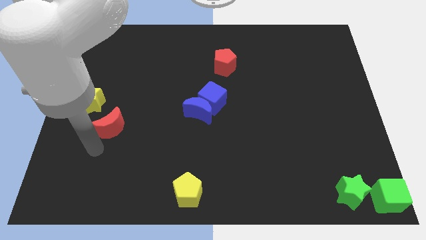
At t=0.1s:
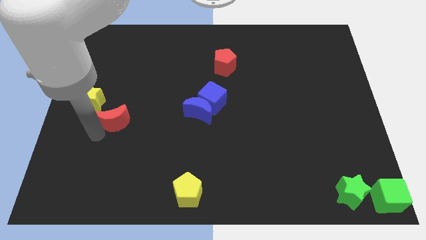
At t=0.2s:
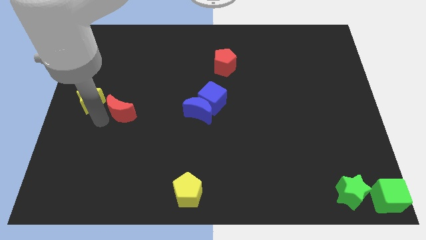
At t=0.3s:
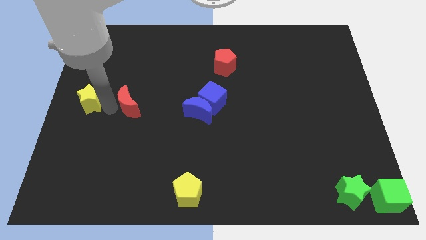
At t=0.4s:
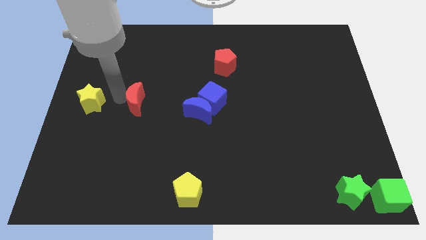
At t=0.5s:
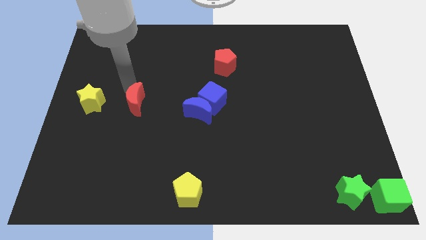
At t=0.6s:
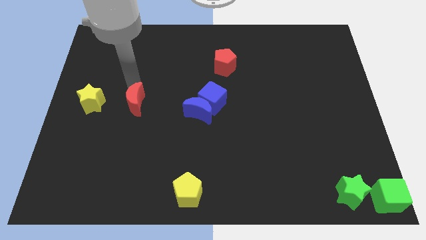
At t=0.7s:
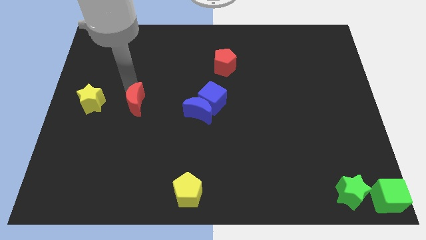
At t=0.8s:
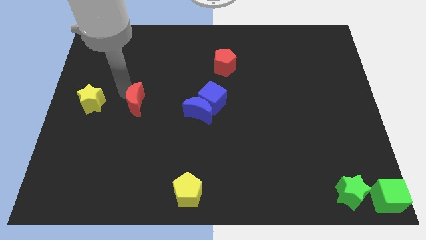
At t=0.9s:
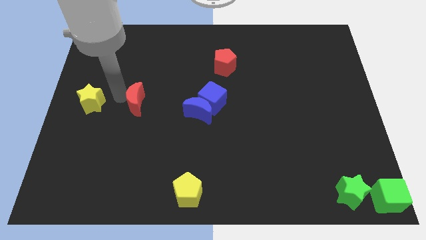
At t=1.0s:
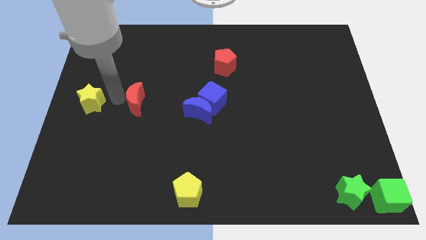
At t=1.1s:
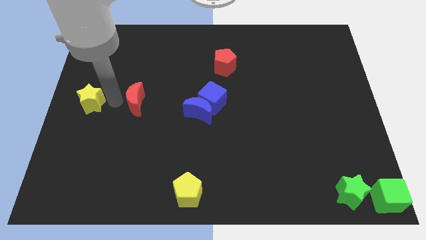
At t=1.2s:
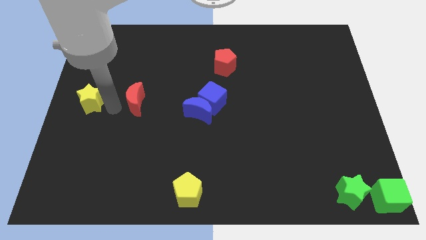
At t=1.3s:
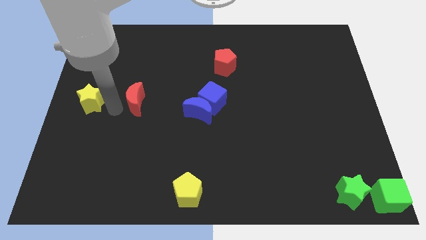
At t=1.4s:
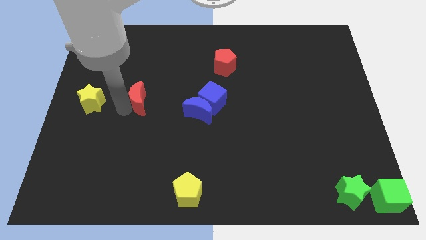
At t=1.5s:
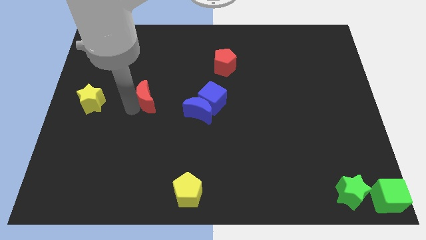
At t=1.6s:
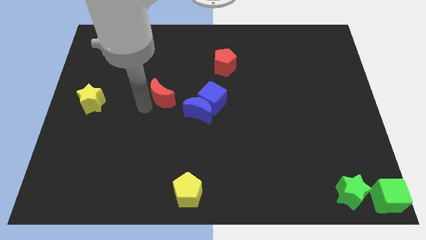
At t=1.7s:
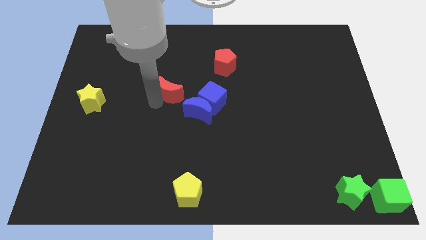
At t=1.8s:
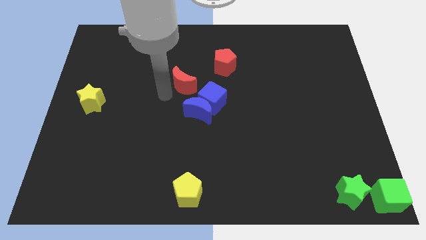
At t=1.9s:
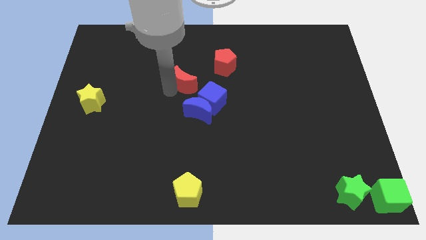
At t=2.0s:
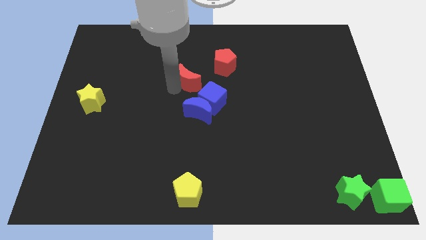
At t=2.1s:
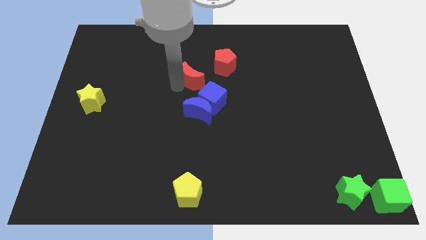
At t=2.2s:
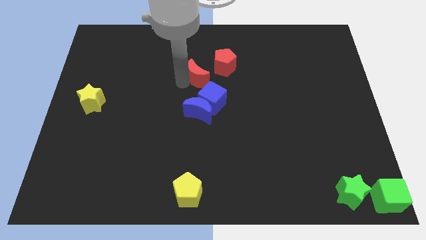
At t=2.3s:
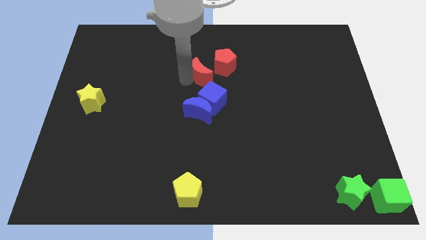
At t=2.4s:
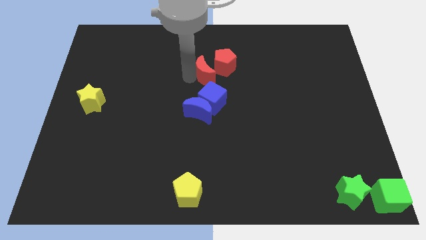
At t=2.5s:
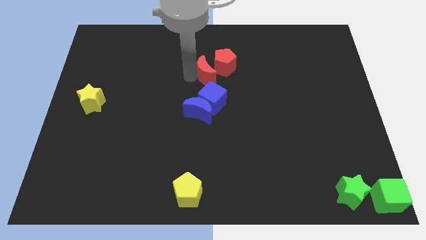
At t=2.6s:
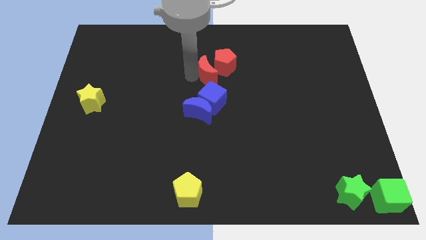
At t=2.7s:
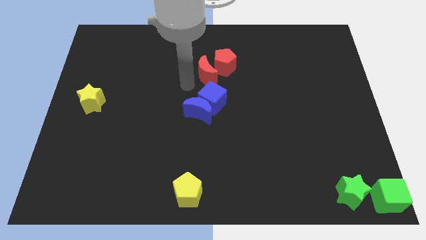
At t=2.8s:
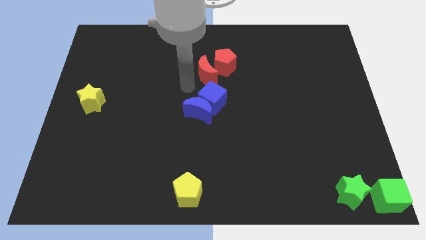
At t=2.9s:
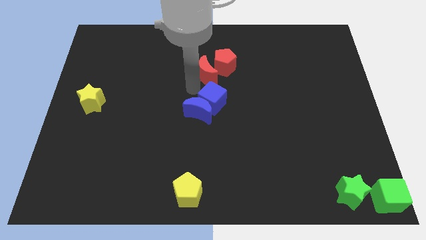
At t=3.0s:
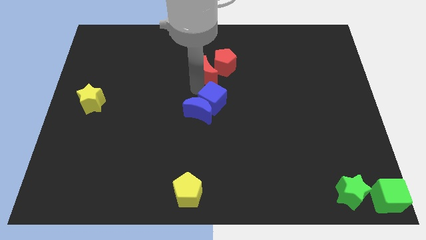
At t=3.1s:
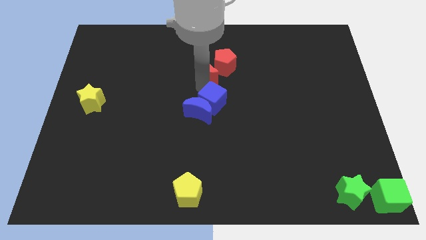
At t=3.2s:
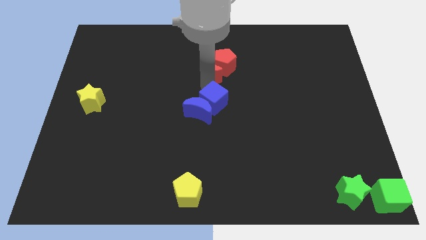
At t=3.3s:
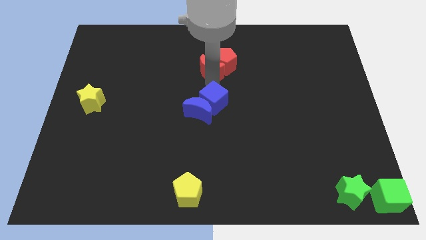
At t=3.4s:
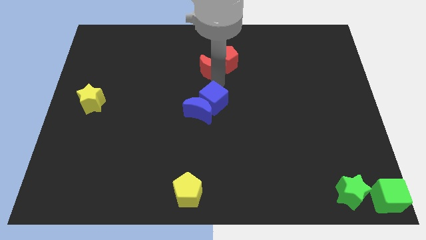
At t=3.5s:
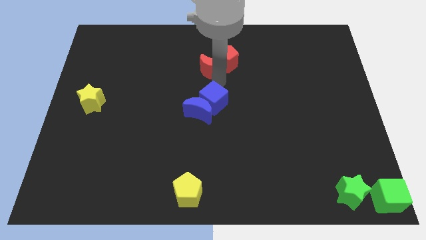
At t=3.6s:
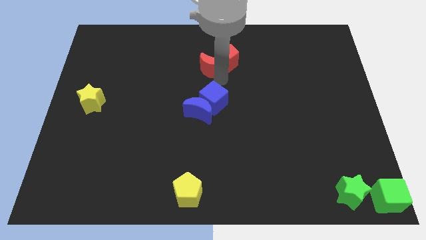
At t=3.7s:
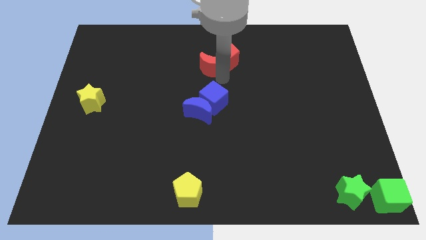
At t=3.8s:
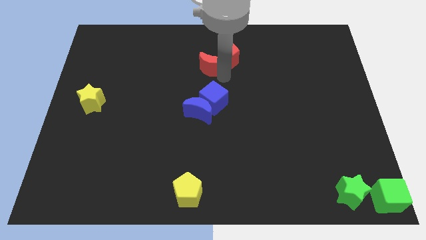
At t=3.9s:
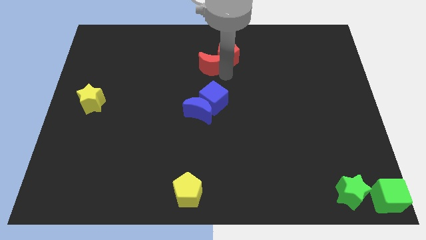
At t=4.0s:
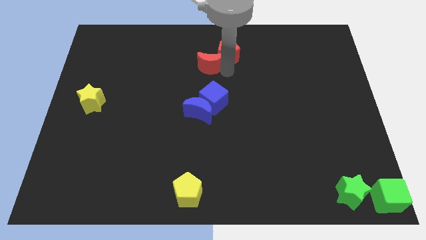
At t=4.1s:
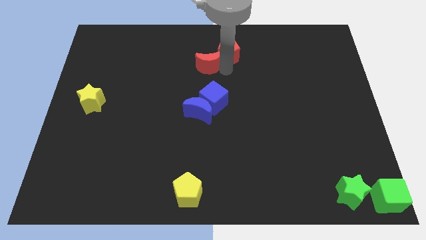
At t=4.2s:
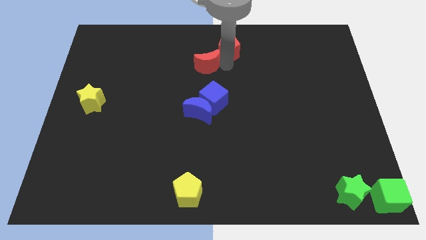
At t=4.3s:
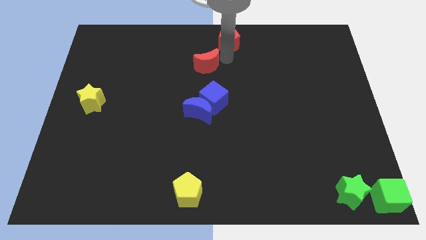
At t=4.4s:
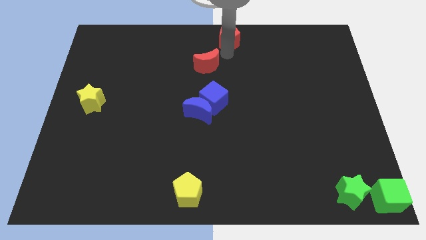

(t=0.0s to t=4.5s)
move the red crescent below the red pentagon

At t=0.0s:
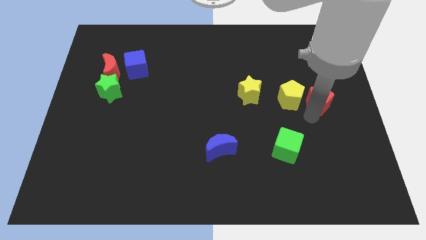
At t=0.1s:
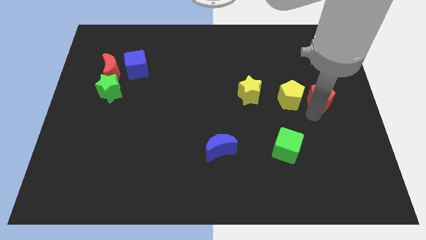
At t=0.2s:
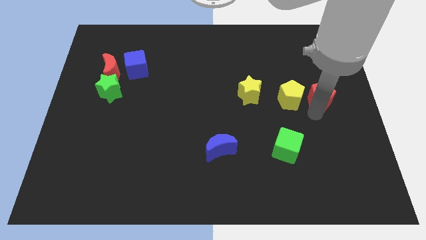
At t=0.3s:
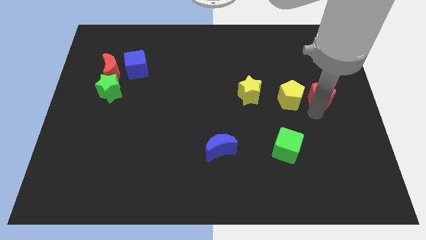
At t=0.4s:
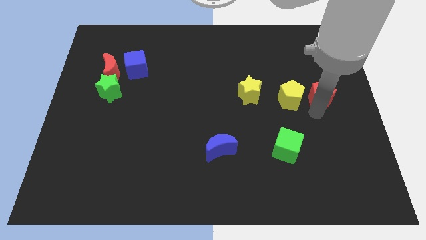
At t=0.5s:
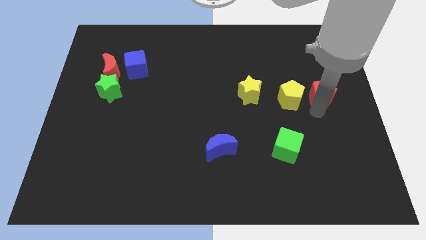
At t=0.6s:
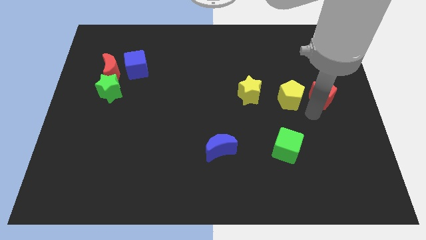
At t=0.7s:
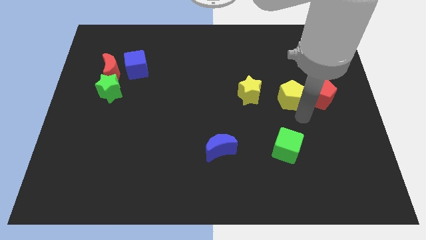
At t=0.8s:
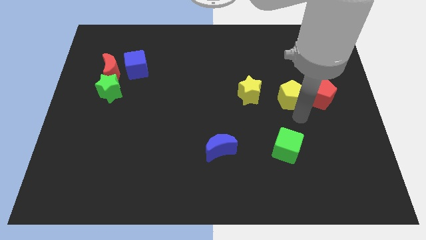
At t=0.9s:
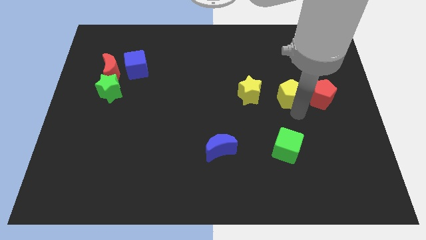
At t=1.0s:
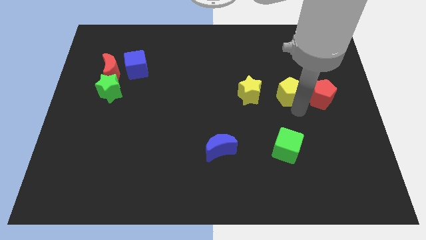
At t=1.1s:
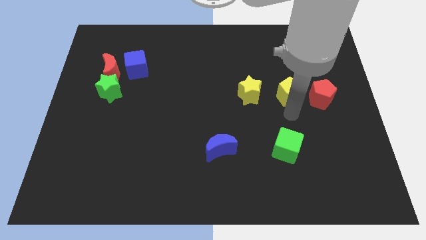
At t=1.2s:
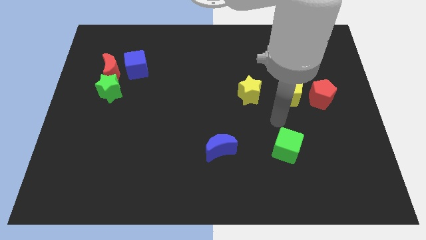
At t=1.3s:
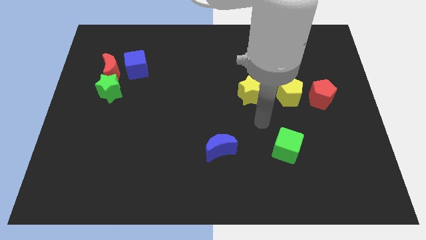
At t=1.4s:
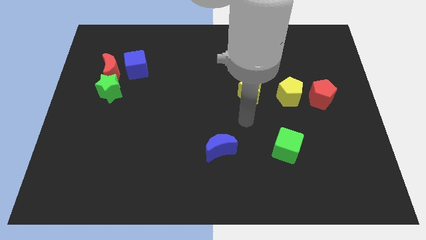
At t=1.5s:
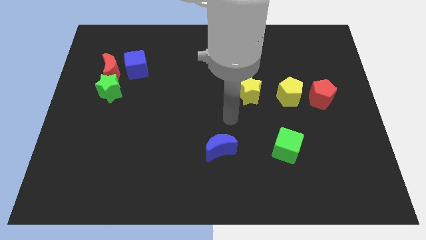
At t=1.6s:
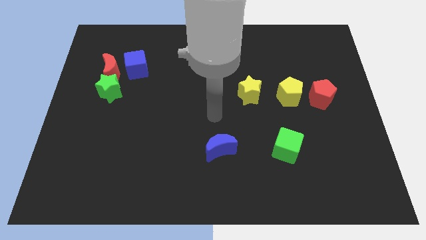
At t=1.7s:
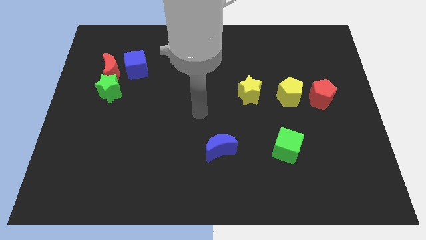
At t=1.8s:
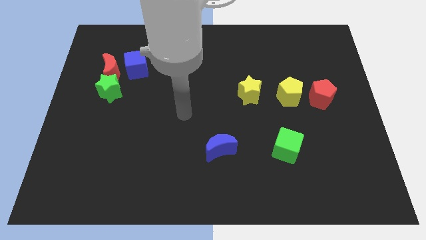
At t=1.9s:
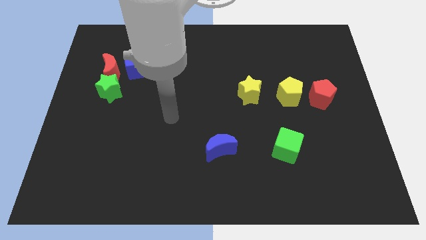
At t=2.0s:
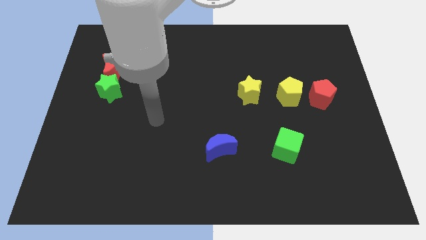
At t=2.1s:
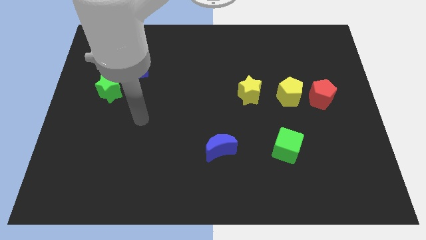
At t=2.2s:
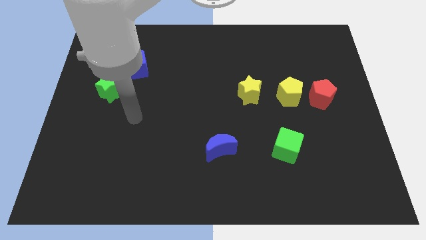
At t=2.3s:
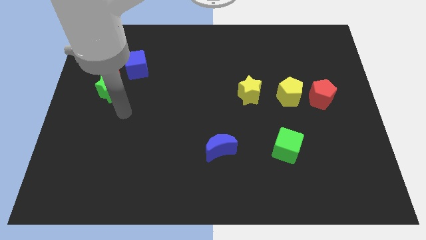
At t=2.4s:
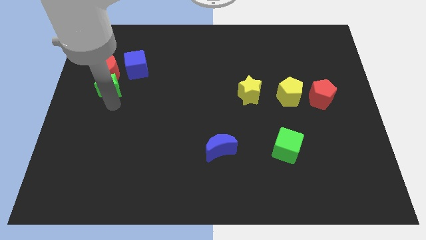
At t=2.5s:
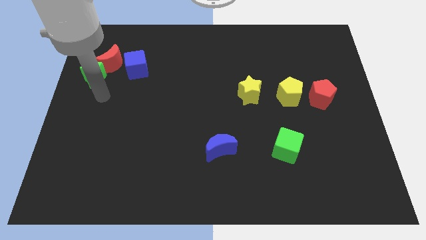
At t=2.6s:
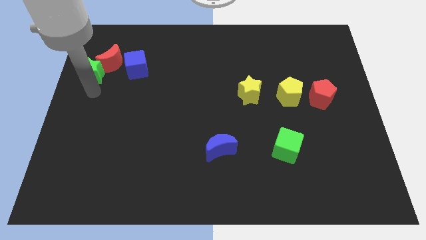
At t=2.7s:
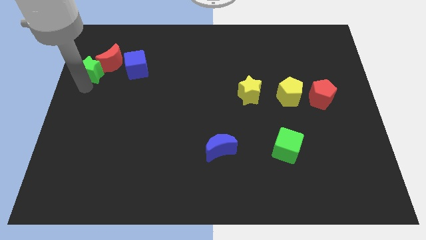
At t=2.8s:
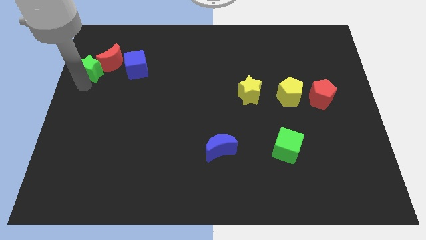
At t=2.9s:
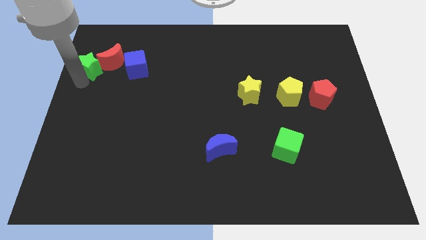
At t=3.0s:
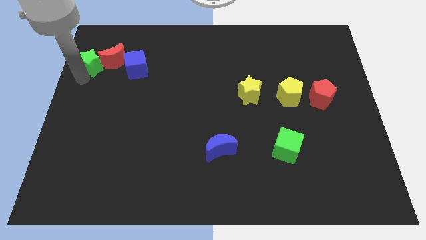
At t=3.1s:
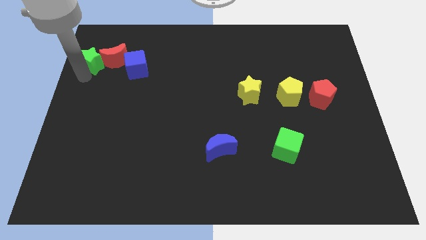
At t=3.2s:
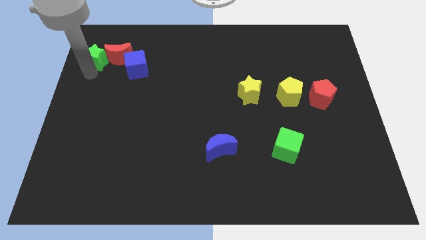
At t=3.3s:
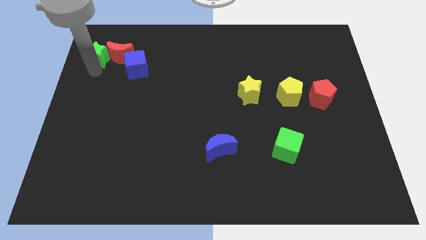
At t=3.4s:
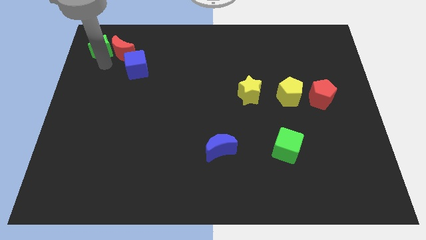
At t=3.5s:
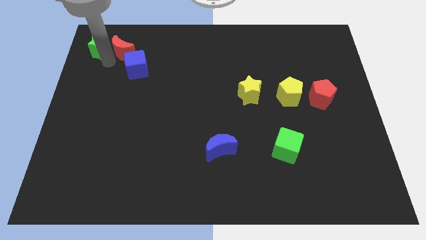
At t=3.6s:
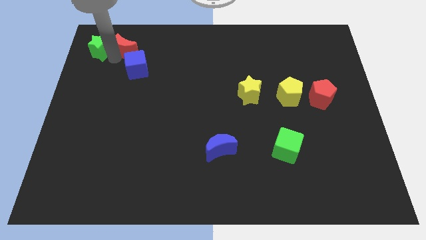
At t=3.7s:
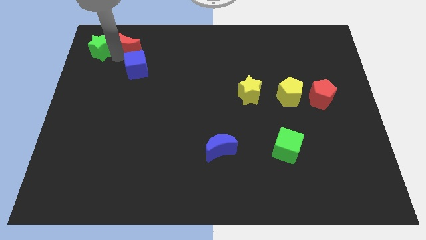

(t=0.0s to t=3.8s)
slightly seperate the green star and red moon

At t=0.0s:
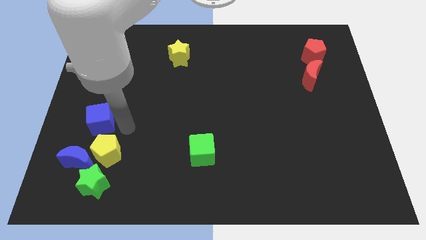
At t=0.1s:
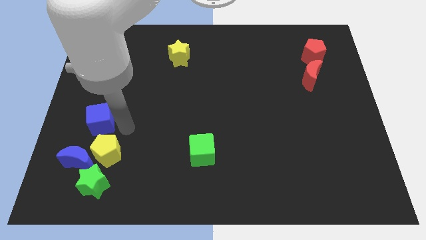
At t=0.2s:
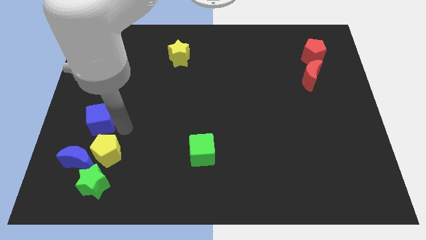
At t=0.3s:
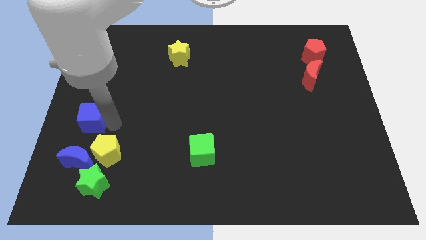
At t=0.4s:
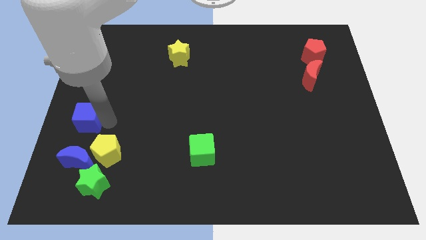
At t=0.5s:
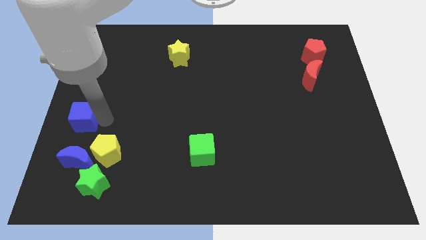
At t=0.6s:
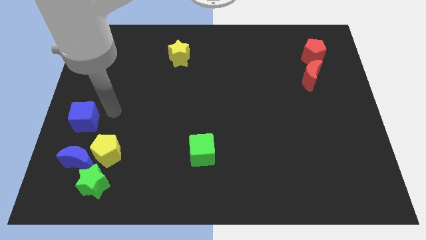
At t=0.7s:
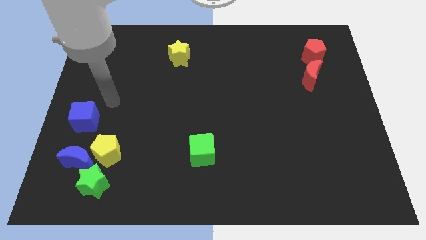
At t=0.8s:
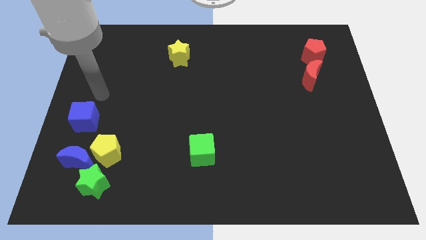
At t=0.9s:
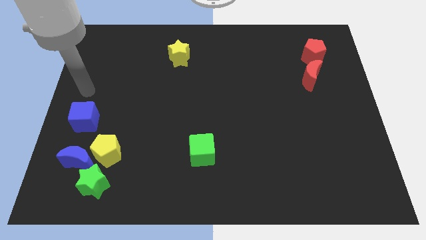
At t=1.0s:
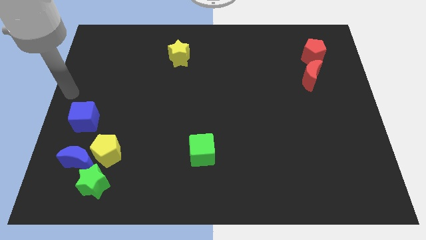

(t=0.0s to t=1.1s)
put blue cube diagonally left to yellow pentagon
